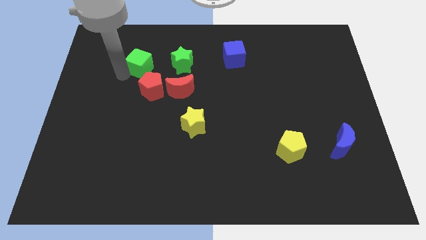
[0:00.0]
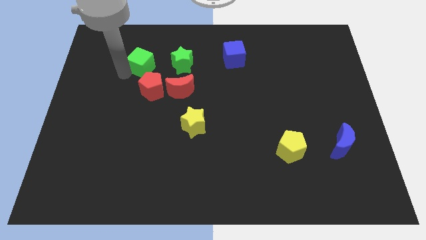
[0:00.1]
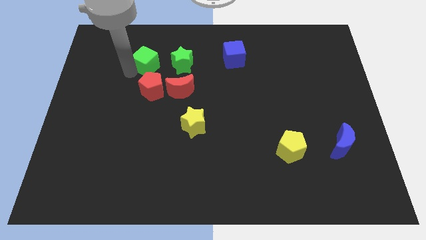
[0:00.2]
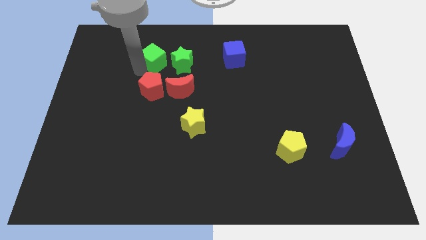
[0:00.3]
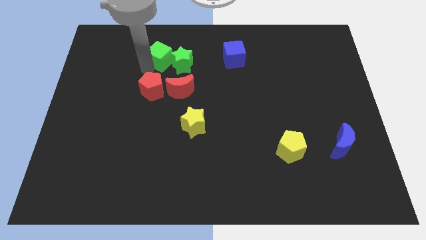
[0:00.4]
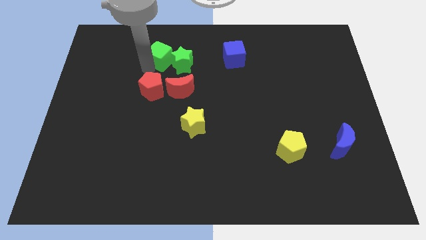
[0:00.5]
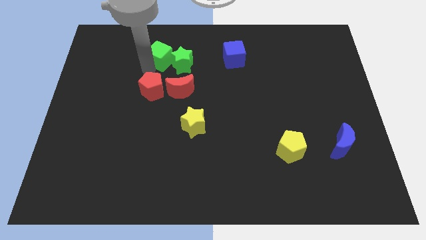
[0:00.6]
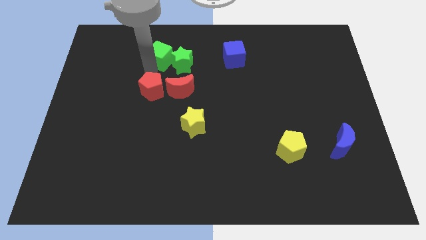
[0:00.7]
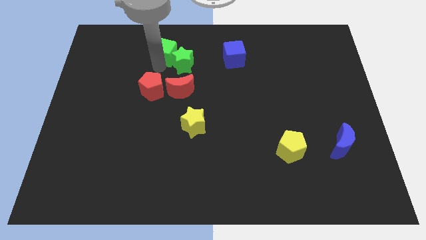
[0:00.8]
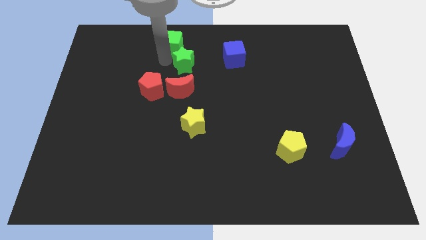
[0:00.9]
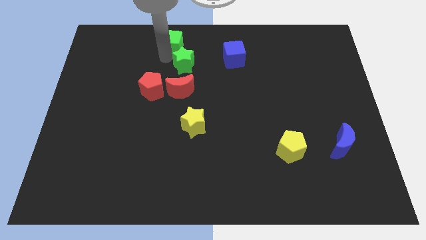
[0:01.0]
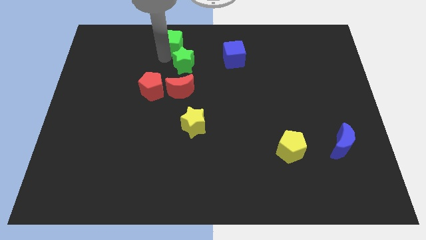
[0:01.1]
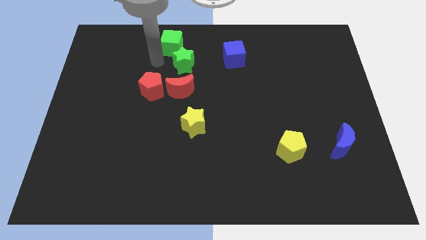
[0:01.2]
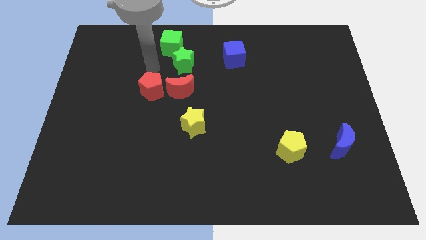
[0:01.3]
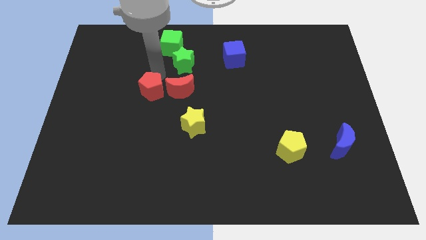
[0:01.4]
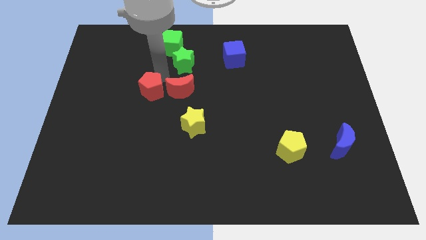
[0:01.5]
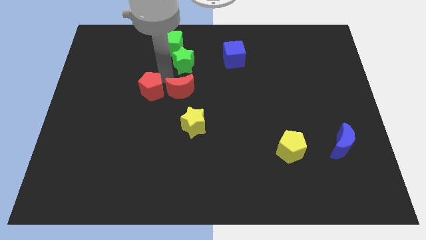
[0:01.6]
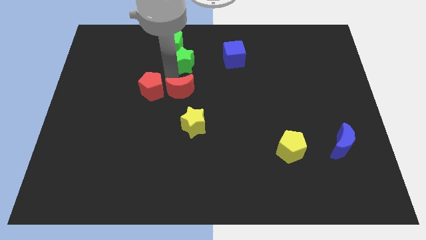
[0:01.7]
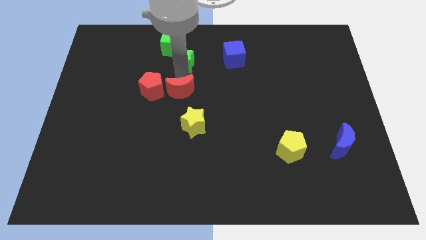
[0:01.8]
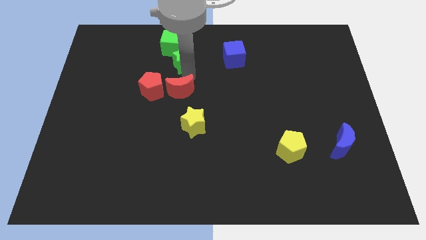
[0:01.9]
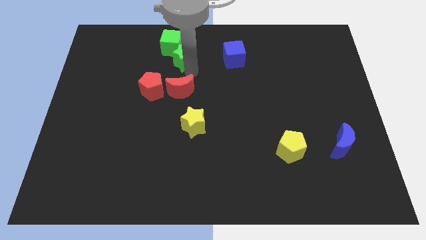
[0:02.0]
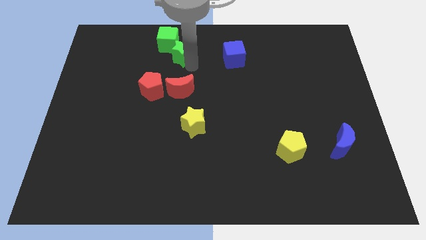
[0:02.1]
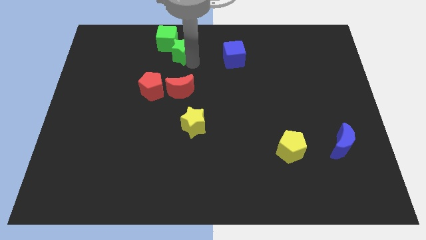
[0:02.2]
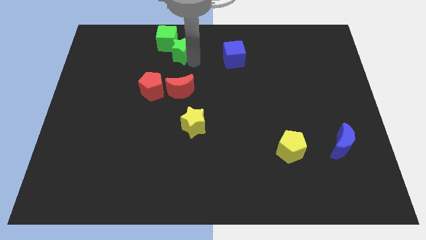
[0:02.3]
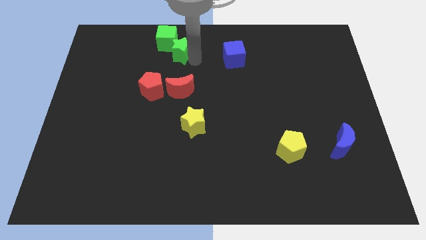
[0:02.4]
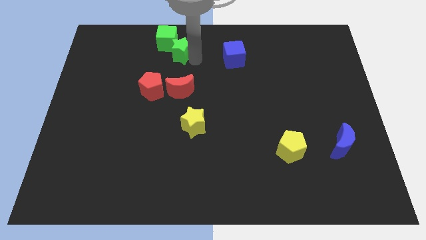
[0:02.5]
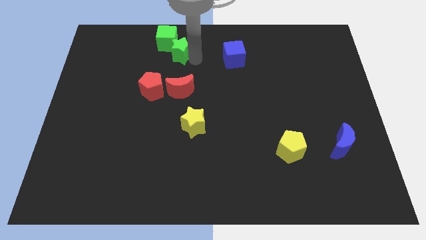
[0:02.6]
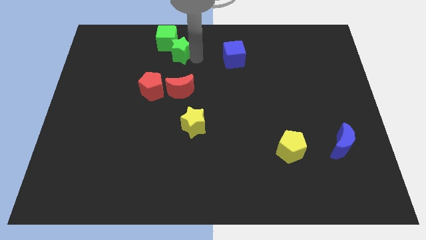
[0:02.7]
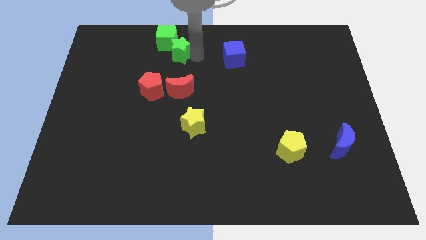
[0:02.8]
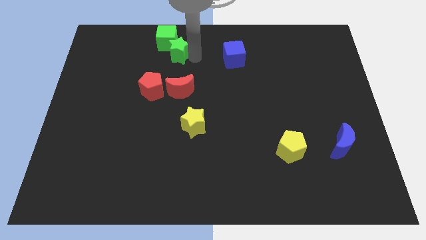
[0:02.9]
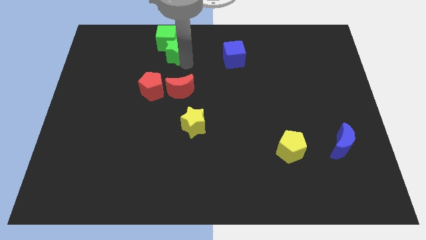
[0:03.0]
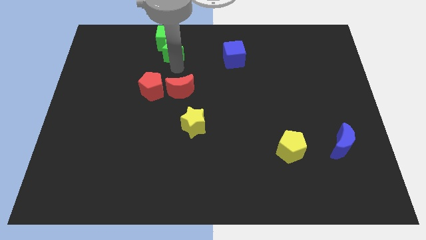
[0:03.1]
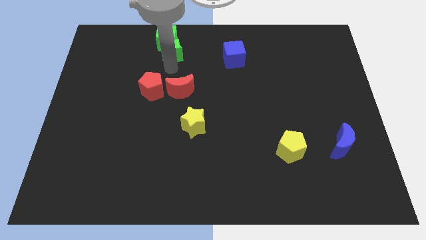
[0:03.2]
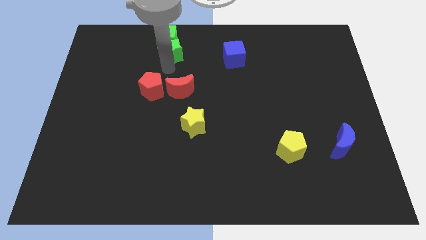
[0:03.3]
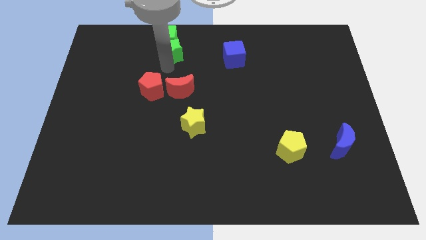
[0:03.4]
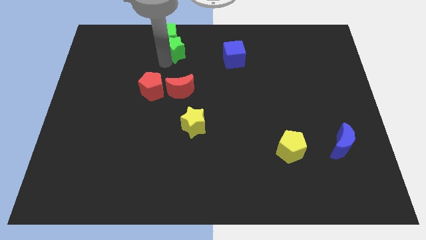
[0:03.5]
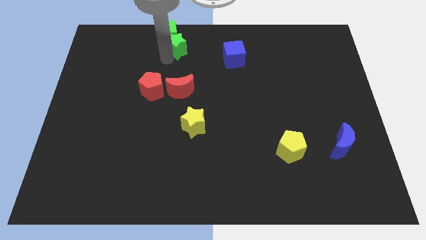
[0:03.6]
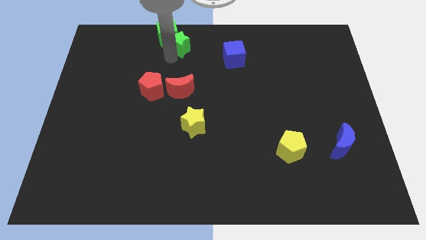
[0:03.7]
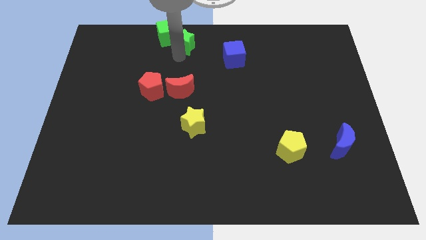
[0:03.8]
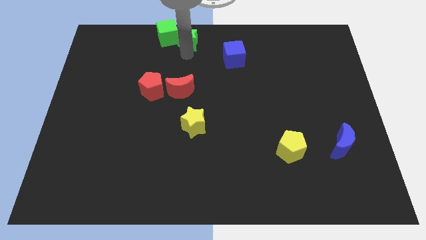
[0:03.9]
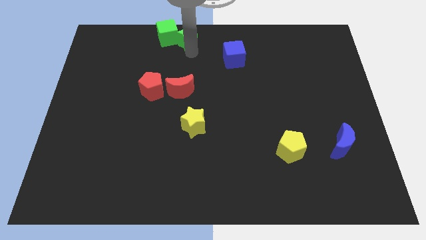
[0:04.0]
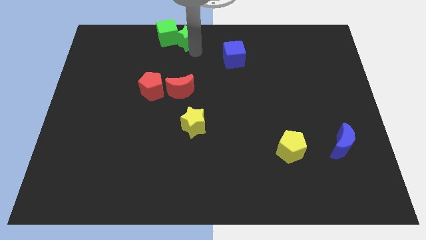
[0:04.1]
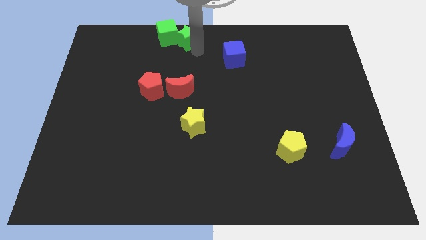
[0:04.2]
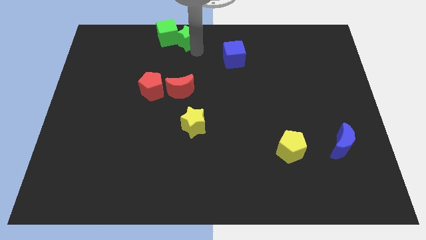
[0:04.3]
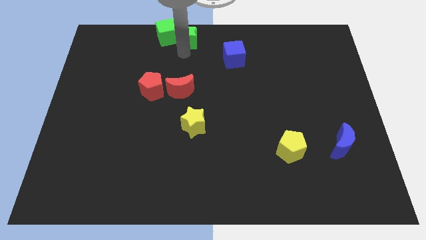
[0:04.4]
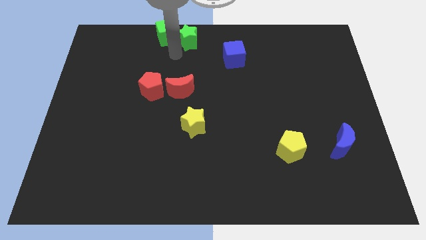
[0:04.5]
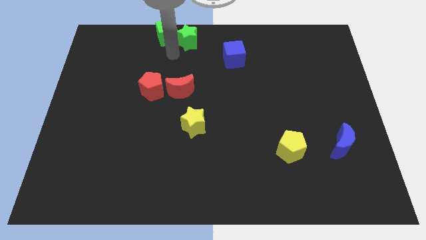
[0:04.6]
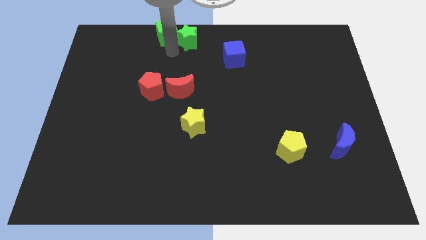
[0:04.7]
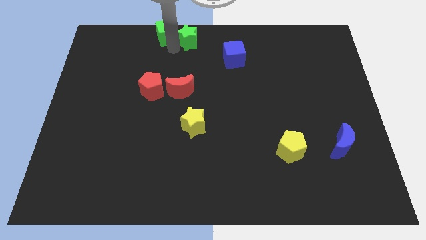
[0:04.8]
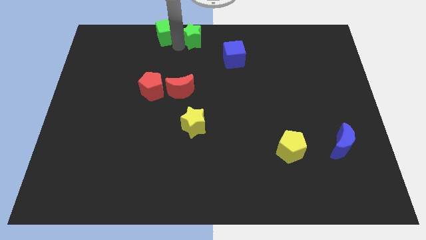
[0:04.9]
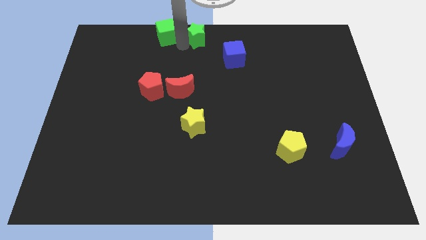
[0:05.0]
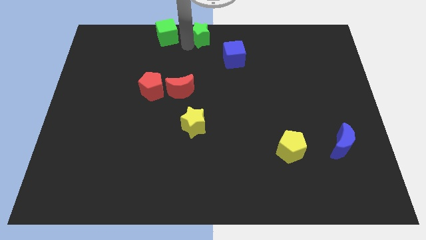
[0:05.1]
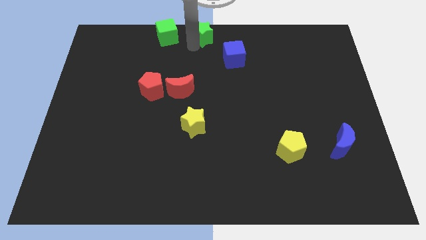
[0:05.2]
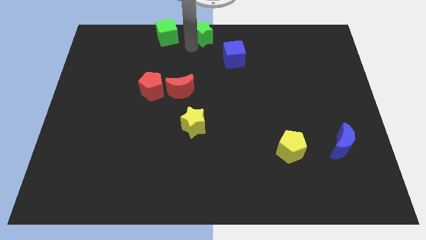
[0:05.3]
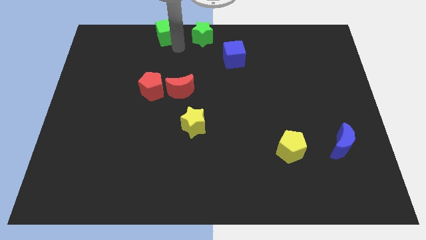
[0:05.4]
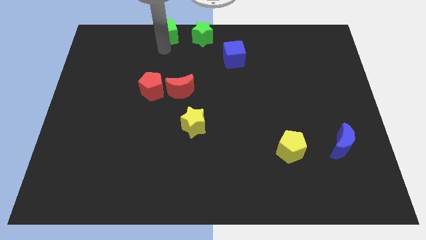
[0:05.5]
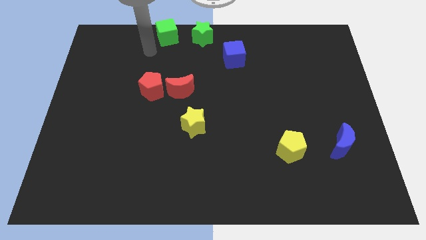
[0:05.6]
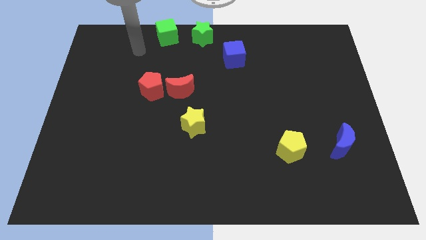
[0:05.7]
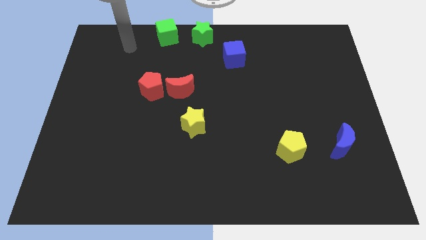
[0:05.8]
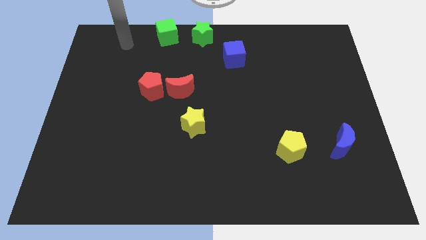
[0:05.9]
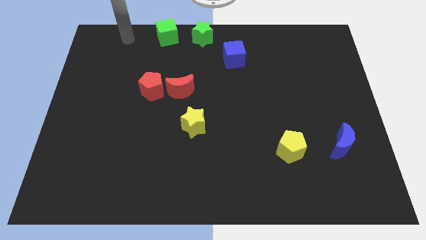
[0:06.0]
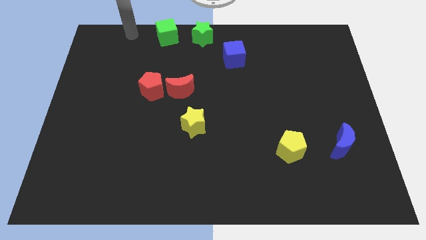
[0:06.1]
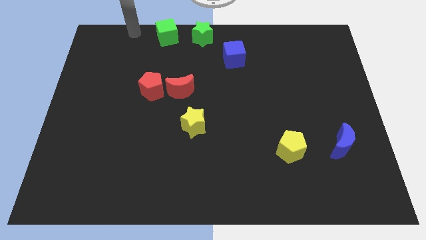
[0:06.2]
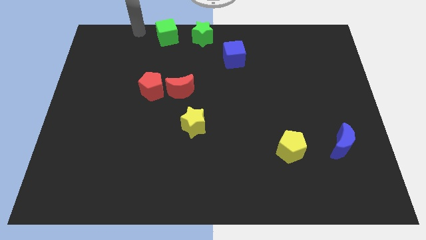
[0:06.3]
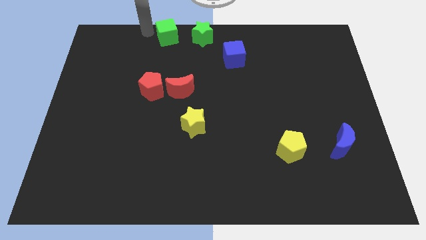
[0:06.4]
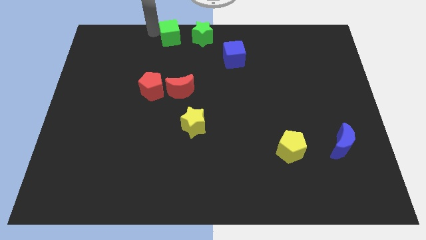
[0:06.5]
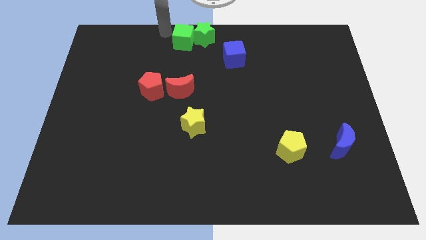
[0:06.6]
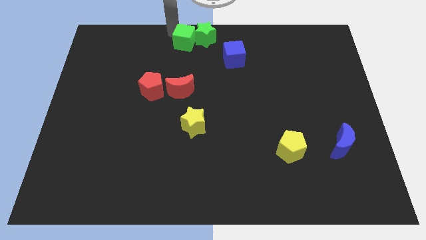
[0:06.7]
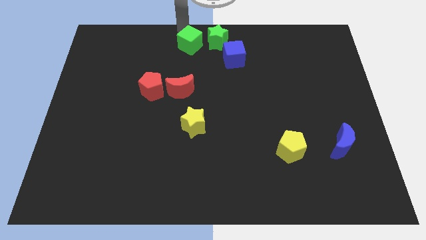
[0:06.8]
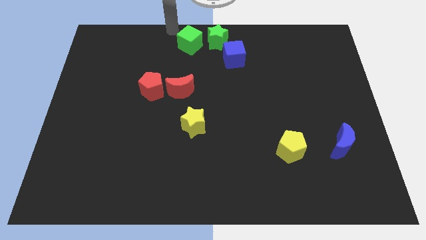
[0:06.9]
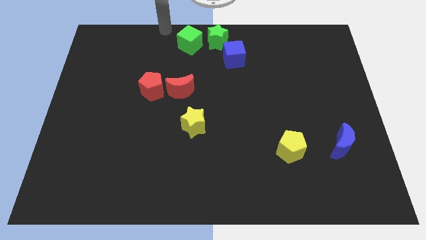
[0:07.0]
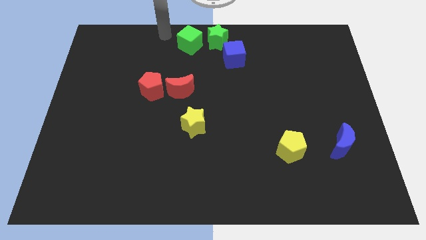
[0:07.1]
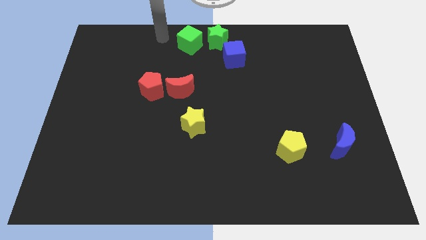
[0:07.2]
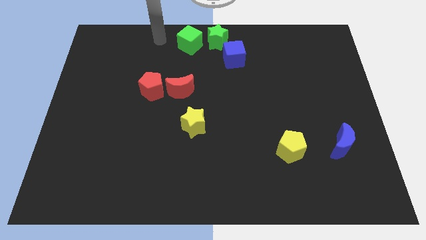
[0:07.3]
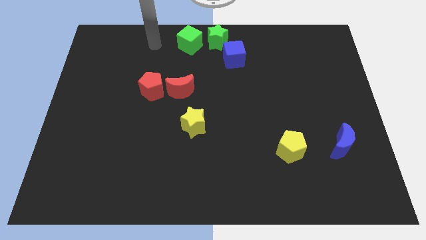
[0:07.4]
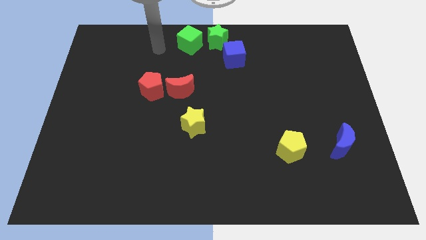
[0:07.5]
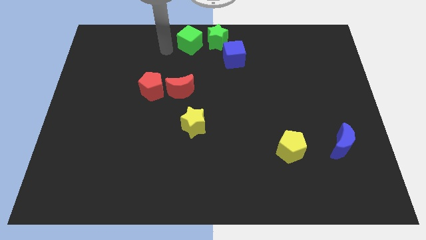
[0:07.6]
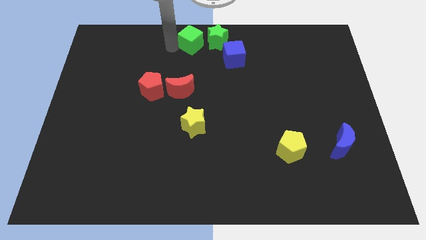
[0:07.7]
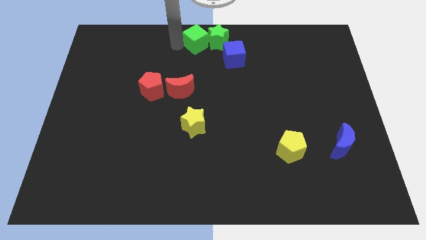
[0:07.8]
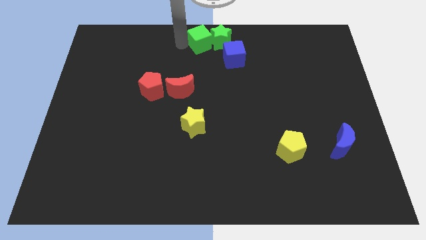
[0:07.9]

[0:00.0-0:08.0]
move the green star and green cube to the top left of the blue cube

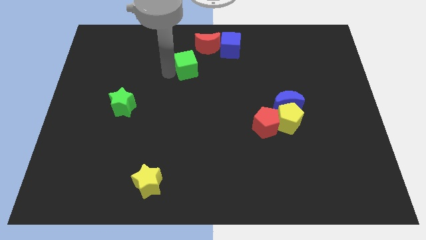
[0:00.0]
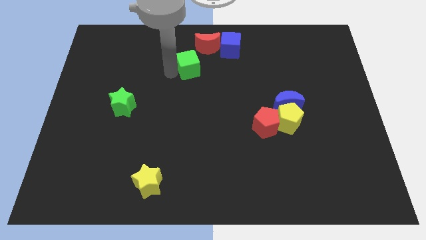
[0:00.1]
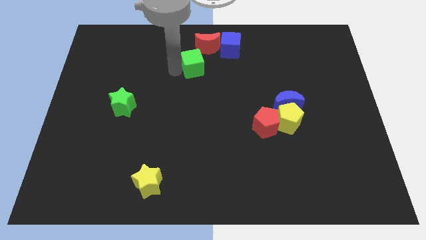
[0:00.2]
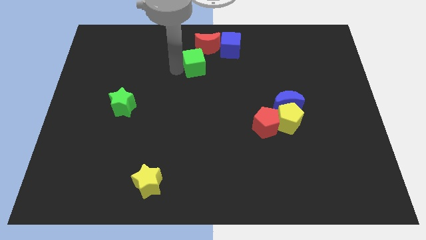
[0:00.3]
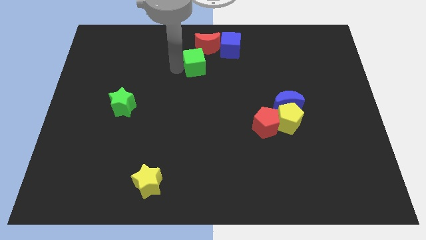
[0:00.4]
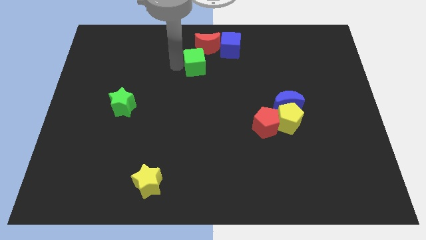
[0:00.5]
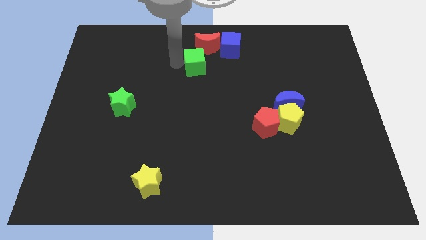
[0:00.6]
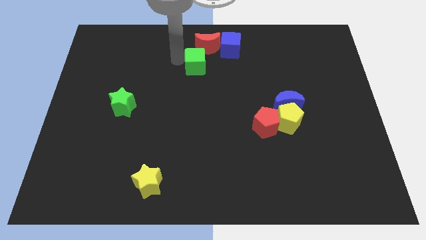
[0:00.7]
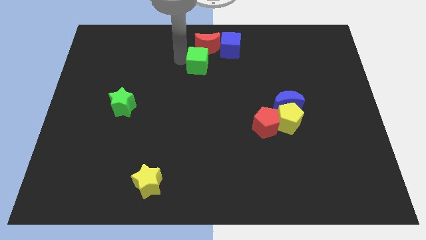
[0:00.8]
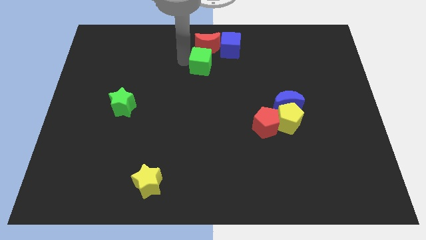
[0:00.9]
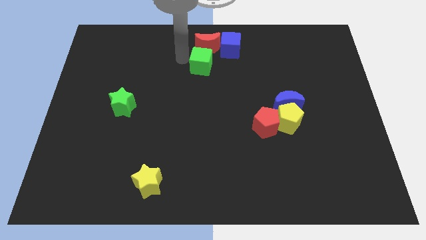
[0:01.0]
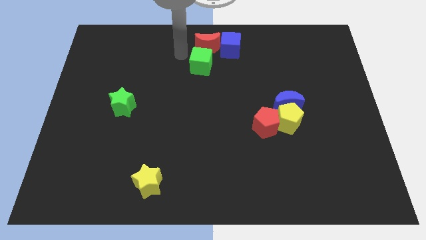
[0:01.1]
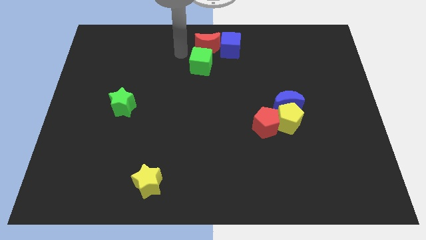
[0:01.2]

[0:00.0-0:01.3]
move the green cube close to the bottom of the red crescent
